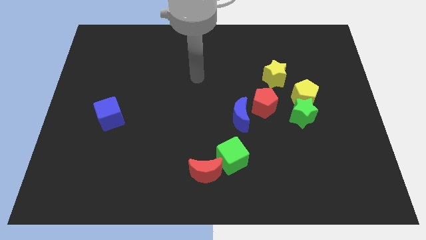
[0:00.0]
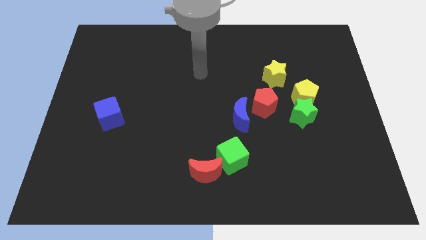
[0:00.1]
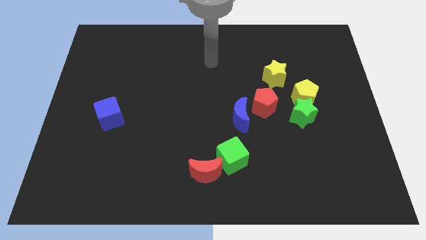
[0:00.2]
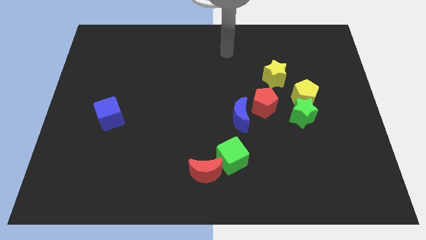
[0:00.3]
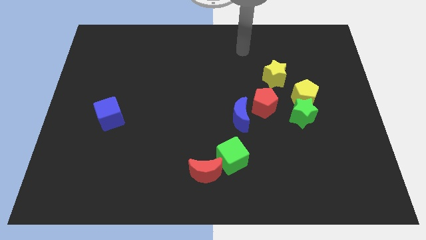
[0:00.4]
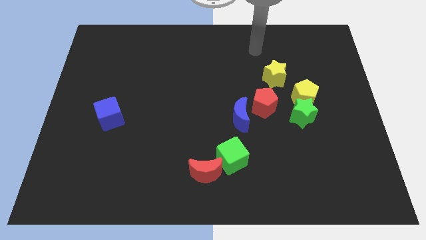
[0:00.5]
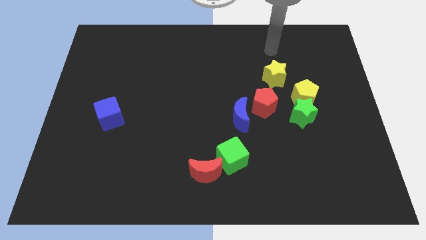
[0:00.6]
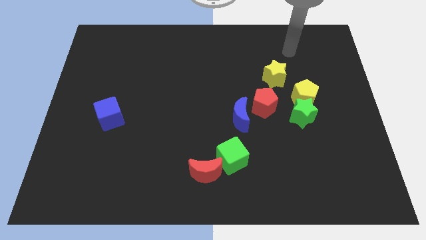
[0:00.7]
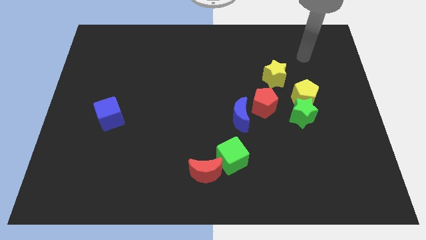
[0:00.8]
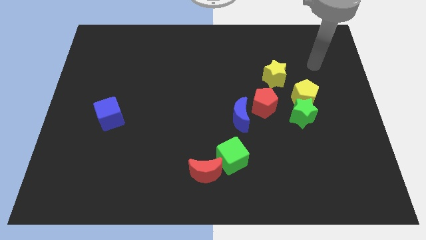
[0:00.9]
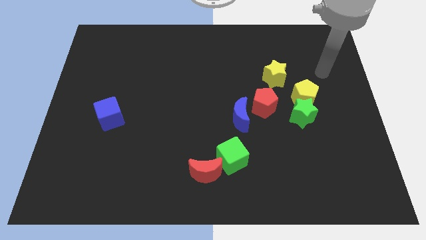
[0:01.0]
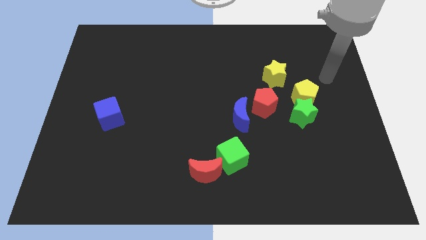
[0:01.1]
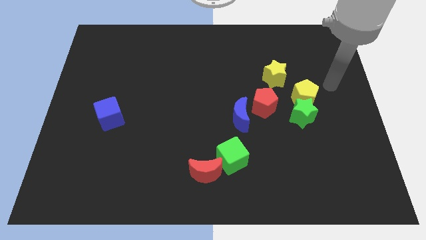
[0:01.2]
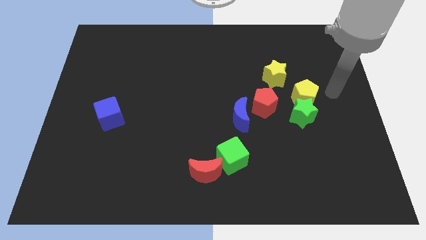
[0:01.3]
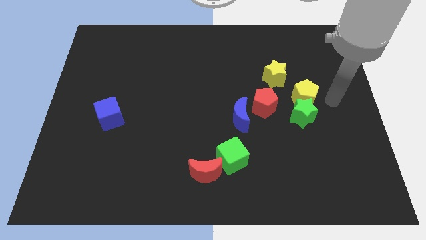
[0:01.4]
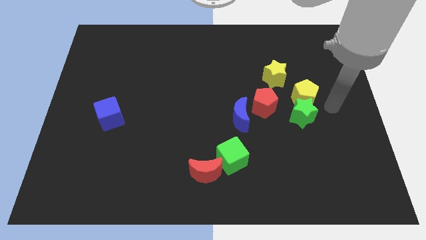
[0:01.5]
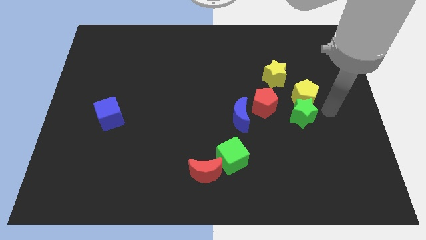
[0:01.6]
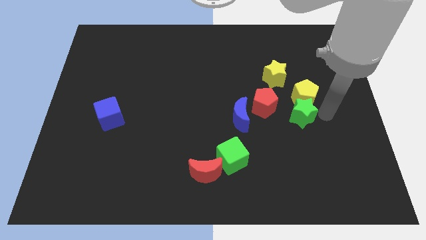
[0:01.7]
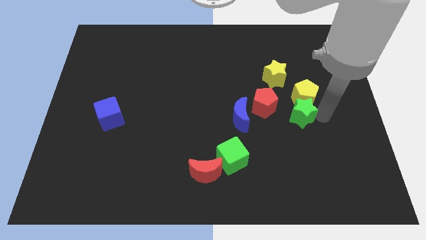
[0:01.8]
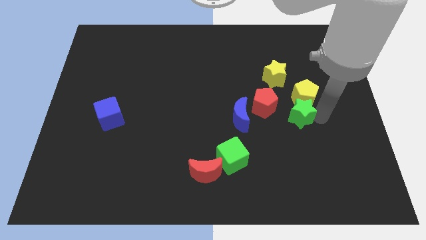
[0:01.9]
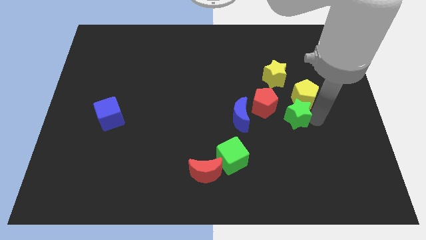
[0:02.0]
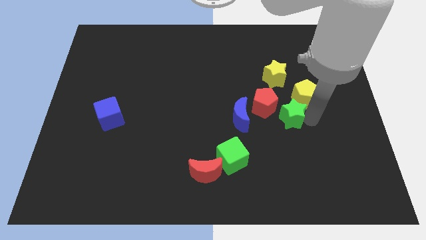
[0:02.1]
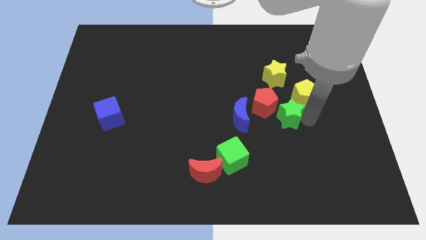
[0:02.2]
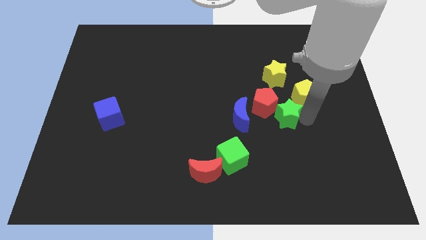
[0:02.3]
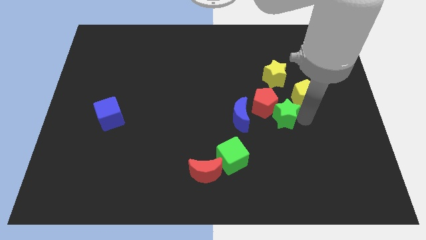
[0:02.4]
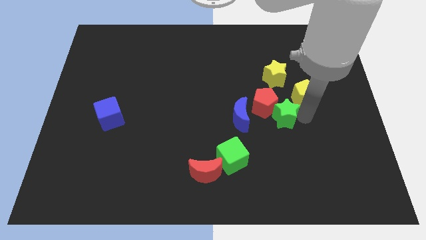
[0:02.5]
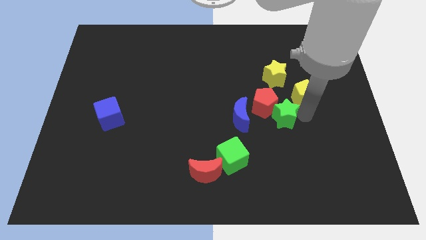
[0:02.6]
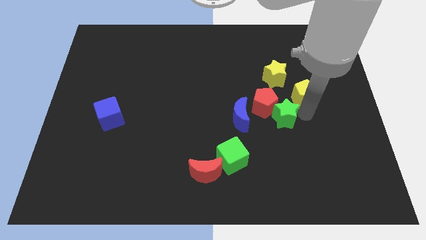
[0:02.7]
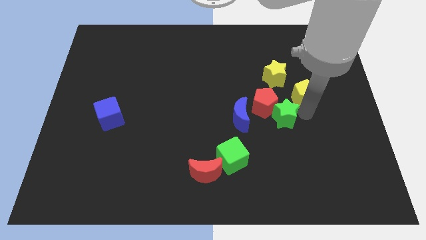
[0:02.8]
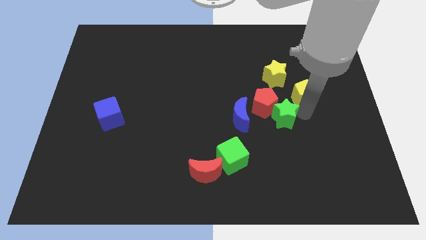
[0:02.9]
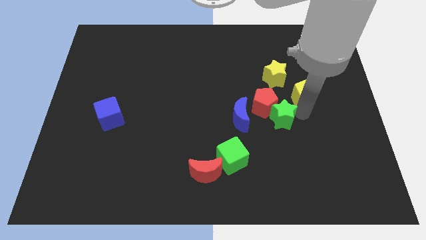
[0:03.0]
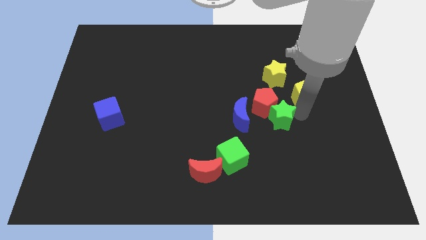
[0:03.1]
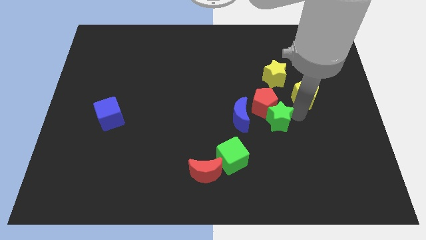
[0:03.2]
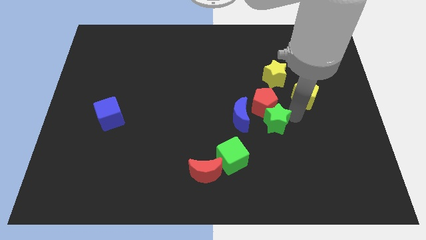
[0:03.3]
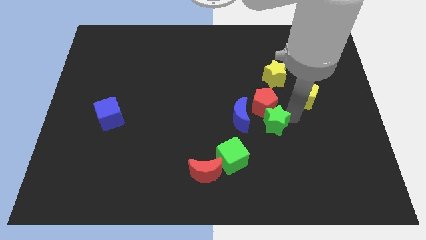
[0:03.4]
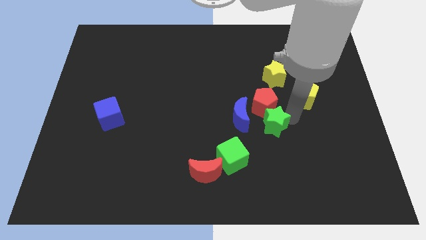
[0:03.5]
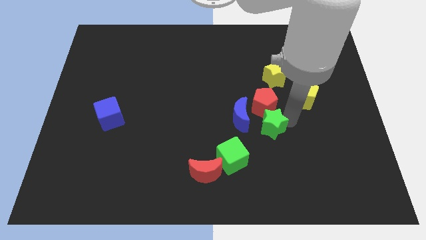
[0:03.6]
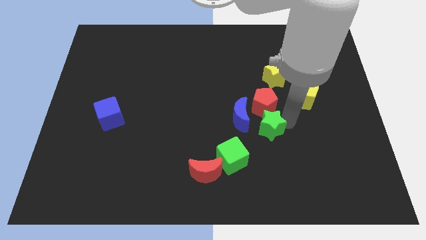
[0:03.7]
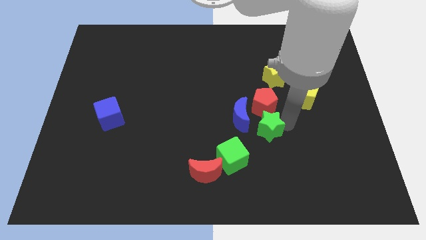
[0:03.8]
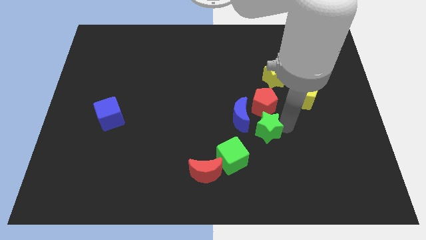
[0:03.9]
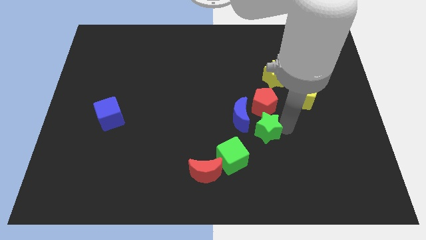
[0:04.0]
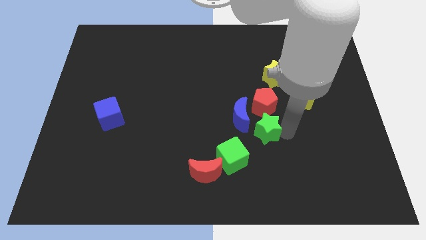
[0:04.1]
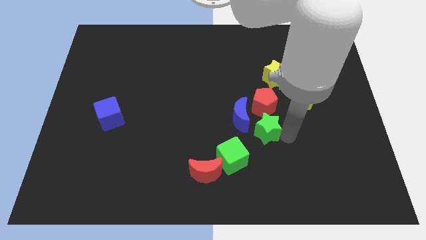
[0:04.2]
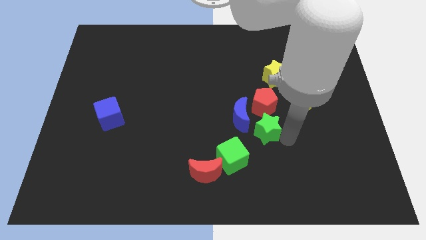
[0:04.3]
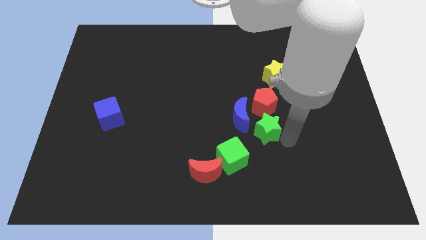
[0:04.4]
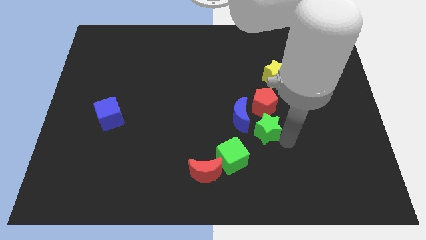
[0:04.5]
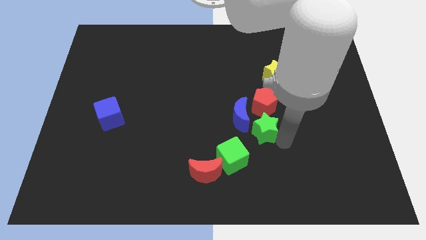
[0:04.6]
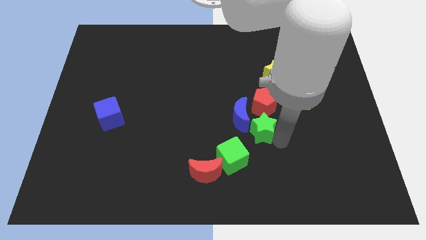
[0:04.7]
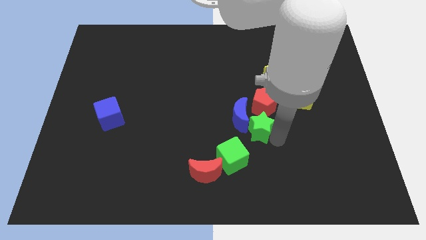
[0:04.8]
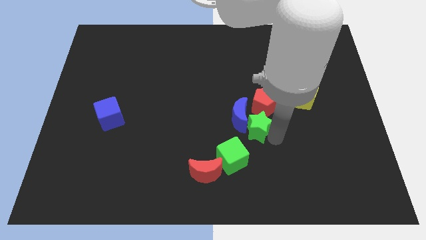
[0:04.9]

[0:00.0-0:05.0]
move the green star close to the blue moon

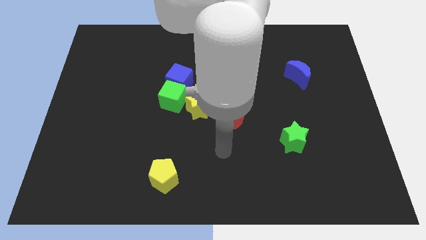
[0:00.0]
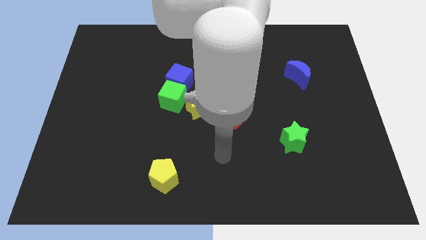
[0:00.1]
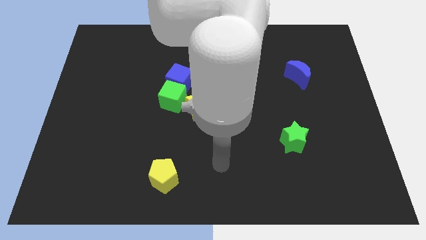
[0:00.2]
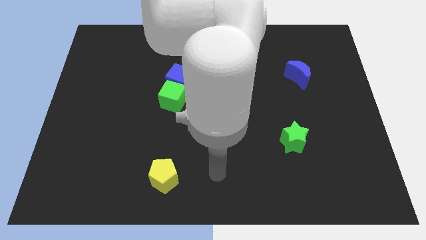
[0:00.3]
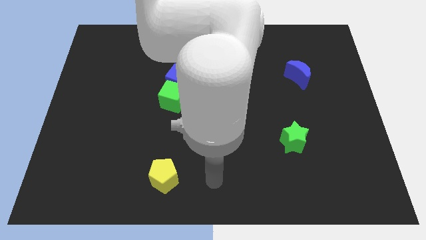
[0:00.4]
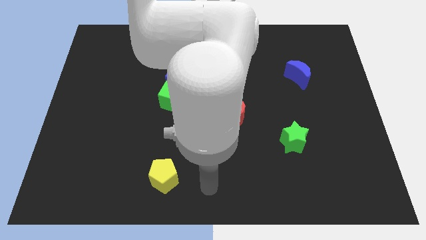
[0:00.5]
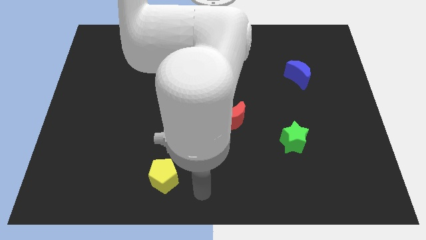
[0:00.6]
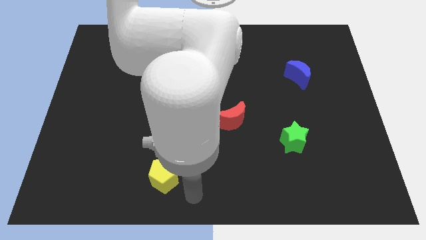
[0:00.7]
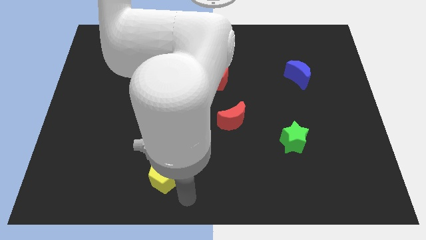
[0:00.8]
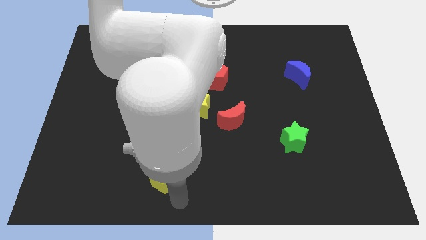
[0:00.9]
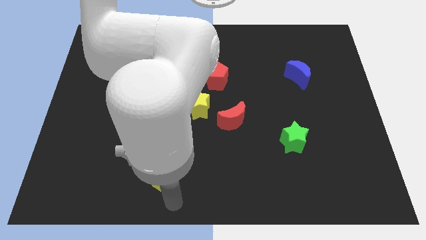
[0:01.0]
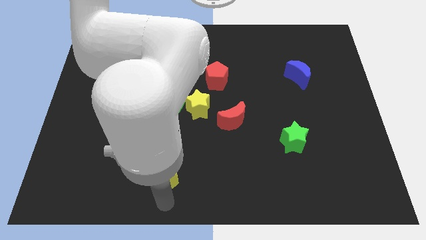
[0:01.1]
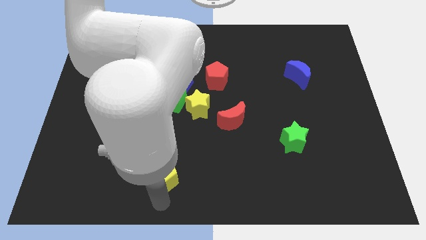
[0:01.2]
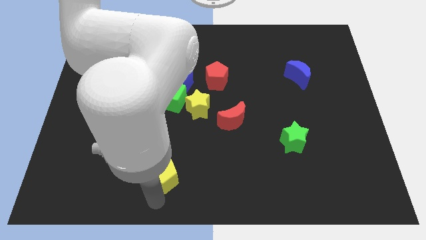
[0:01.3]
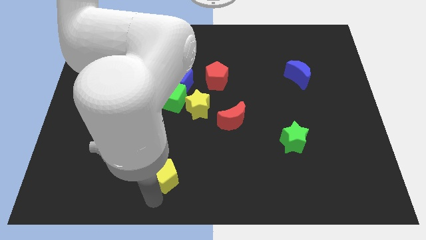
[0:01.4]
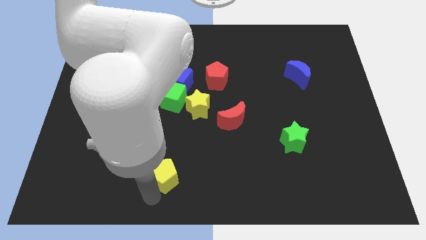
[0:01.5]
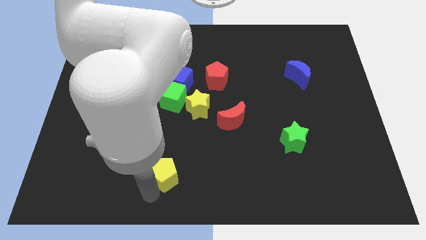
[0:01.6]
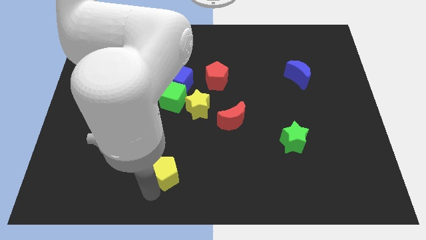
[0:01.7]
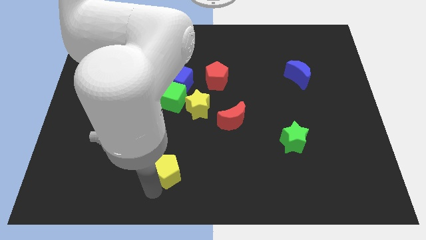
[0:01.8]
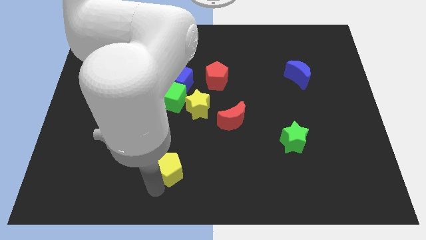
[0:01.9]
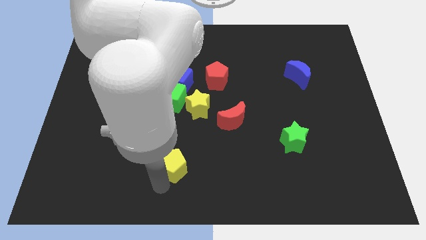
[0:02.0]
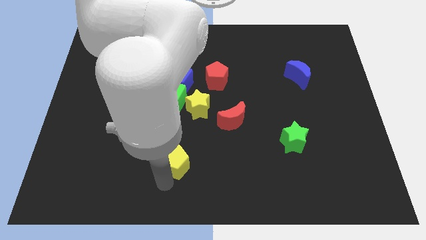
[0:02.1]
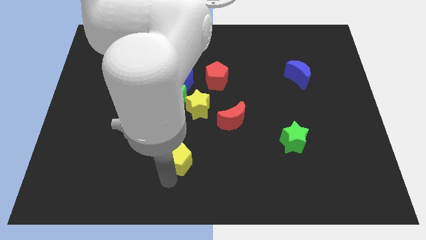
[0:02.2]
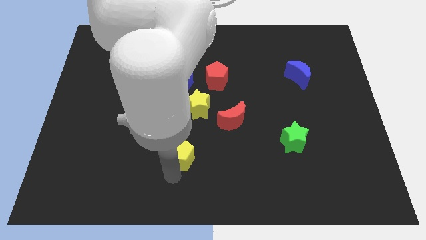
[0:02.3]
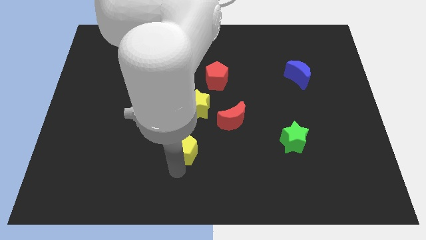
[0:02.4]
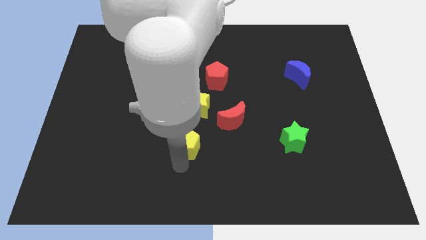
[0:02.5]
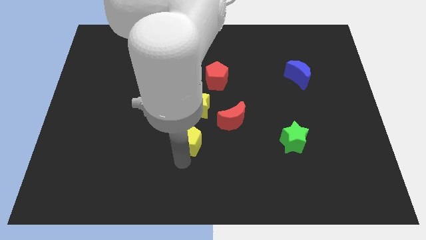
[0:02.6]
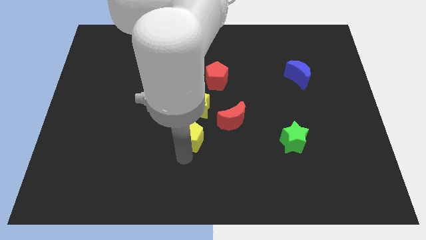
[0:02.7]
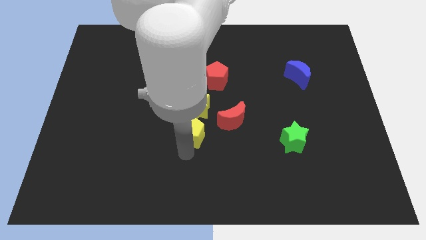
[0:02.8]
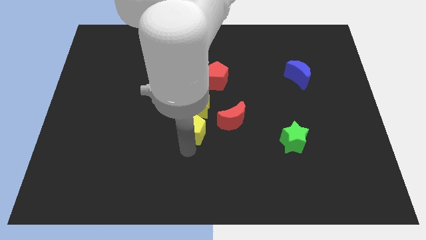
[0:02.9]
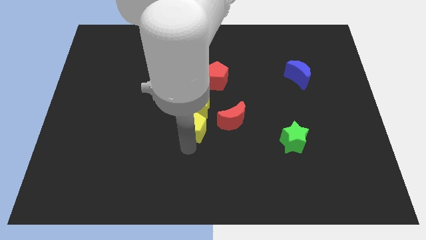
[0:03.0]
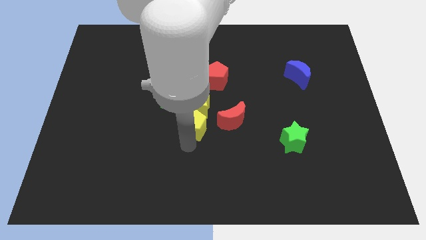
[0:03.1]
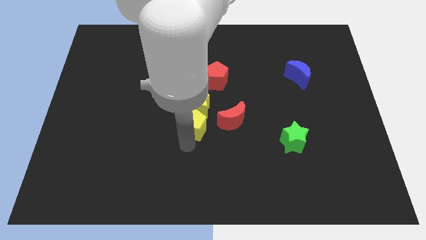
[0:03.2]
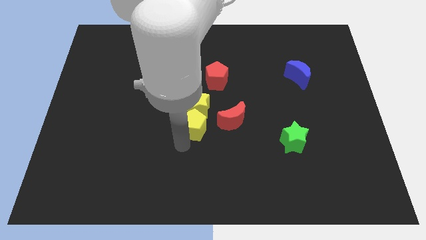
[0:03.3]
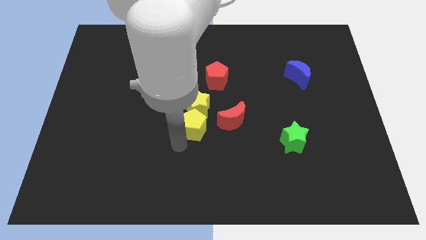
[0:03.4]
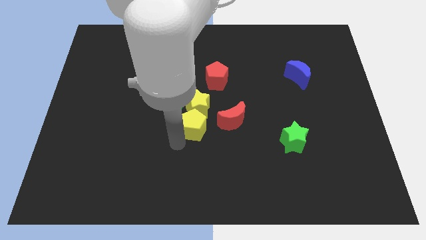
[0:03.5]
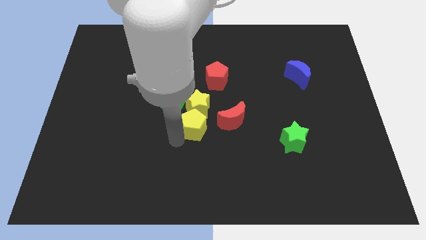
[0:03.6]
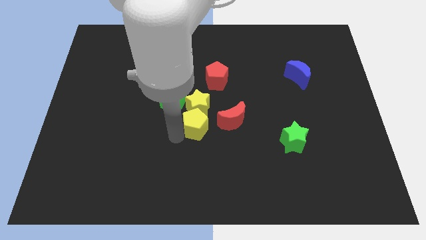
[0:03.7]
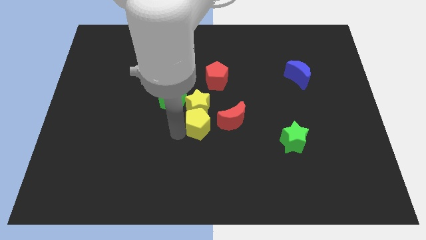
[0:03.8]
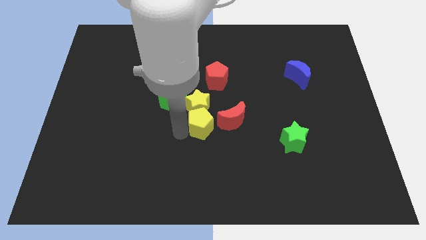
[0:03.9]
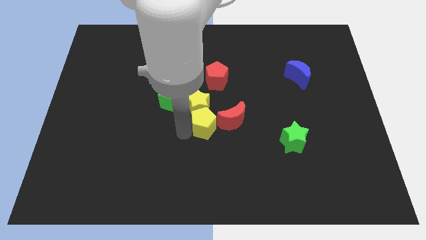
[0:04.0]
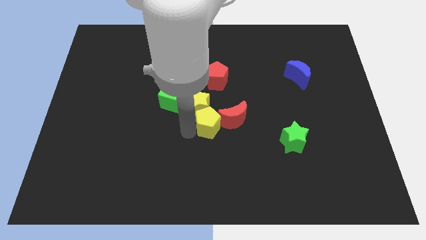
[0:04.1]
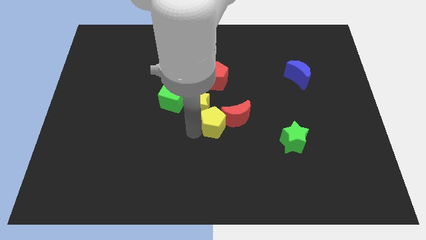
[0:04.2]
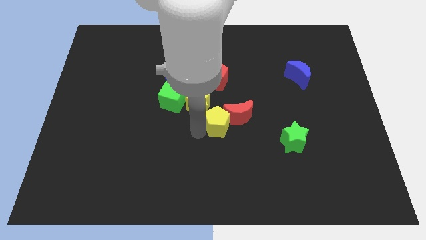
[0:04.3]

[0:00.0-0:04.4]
move the yellow pentagon to the red moon
